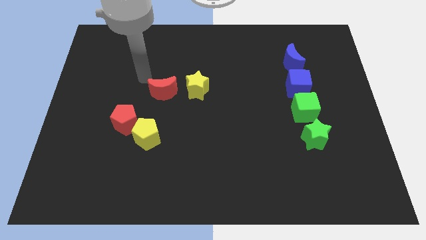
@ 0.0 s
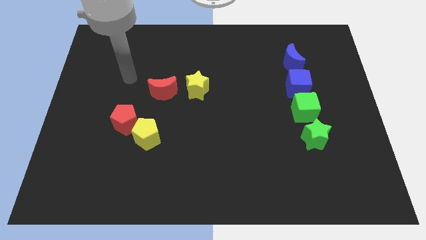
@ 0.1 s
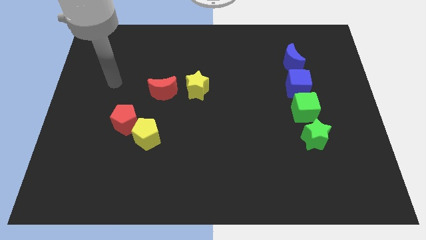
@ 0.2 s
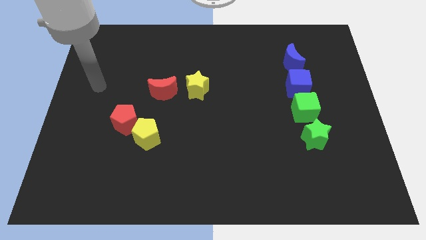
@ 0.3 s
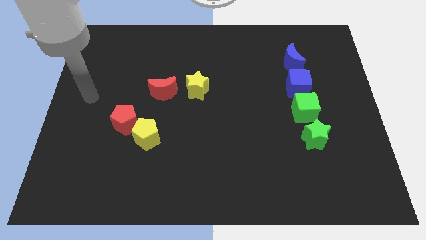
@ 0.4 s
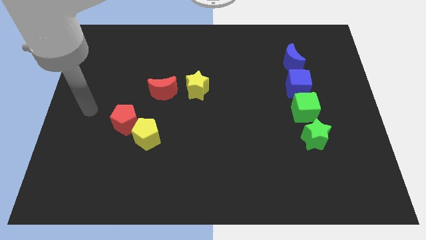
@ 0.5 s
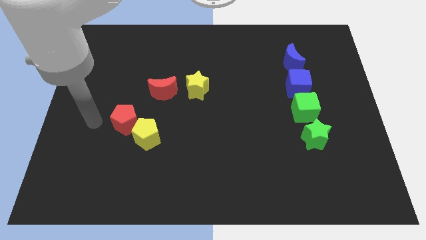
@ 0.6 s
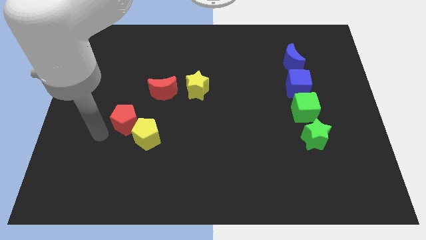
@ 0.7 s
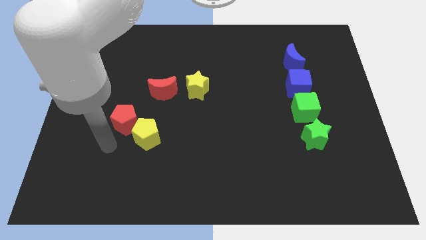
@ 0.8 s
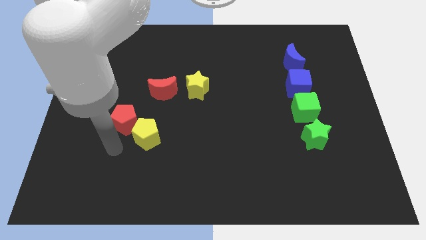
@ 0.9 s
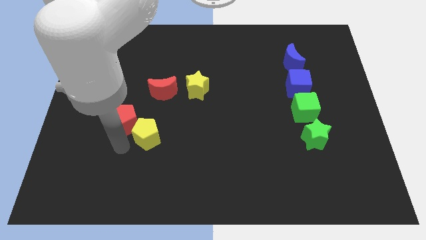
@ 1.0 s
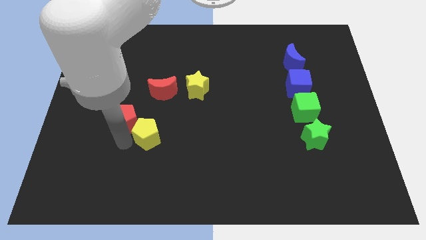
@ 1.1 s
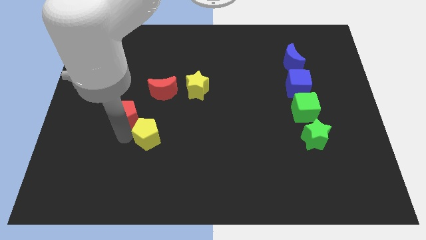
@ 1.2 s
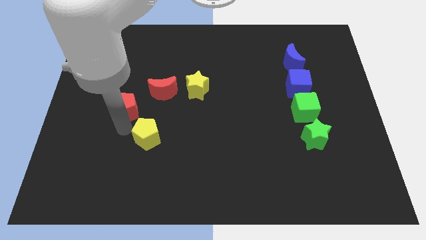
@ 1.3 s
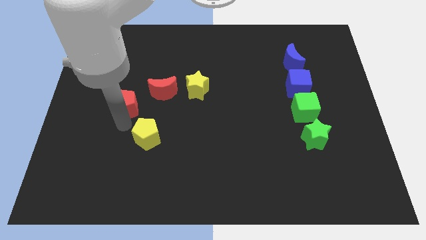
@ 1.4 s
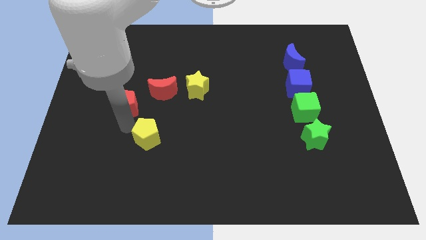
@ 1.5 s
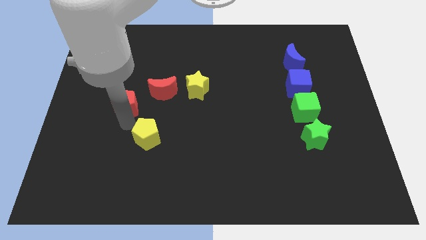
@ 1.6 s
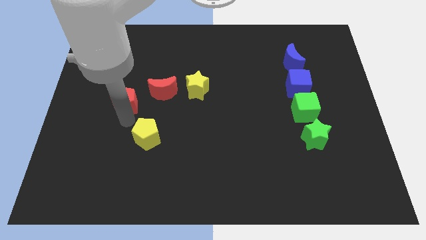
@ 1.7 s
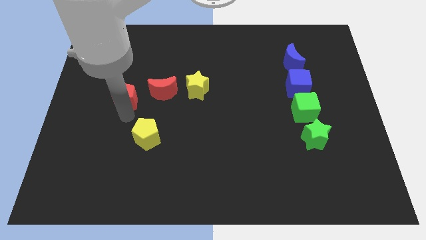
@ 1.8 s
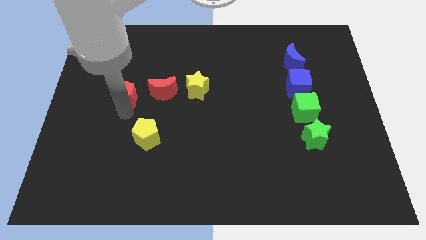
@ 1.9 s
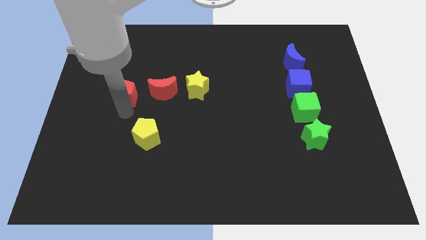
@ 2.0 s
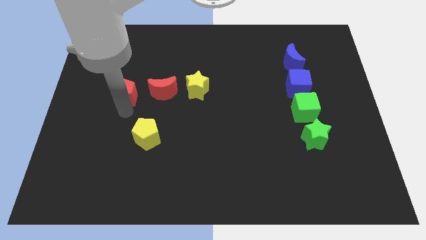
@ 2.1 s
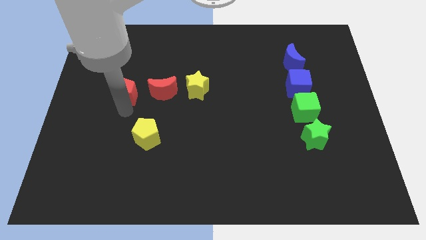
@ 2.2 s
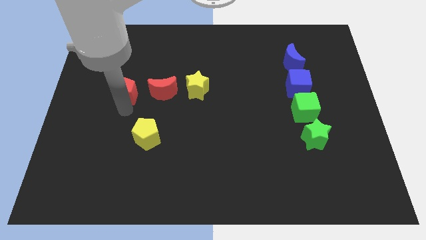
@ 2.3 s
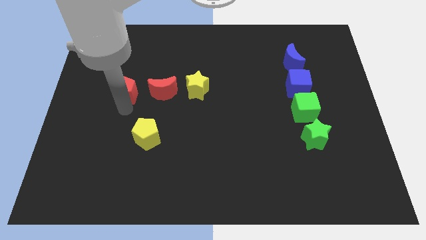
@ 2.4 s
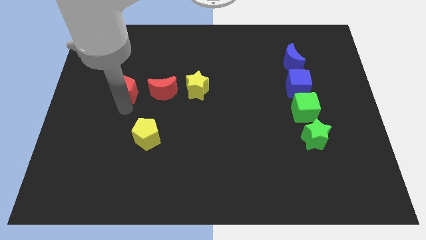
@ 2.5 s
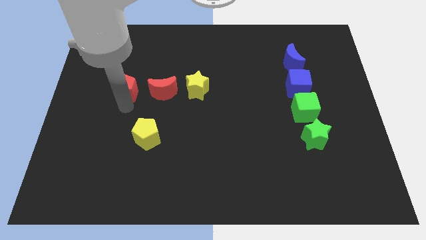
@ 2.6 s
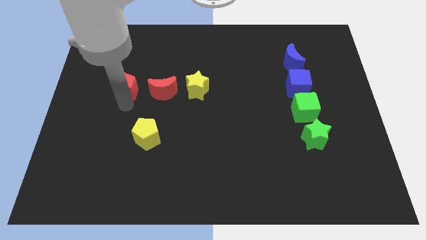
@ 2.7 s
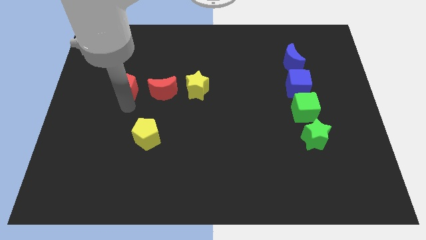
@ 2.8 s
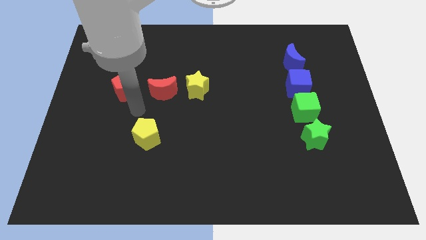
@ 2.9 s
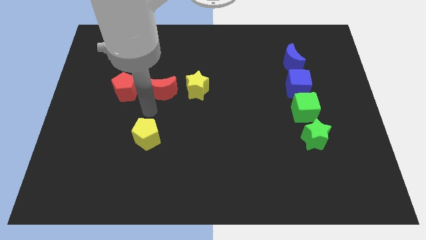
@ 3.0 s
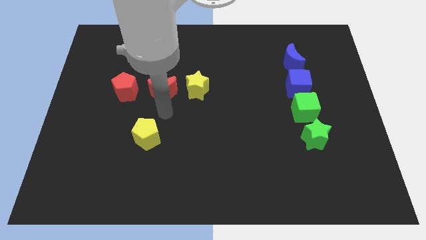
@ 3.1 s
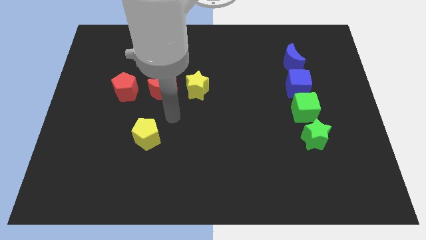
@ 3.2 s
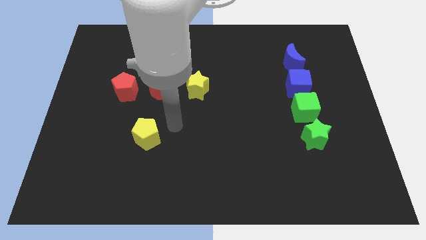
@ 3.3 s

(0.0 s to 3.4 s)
slide the red pentagon to the left side of the red crescent

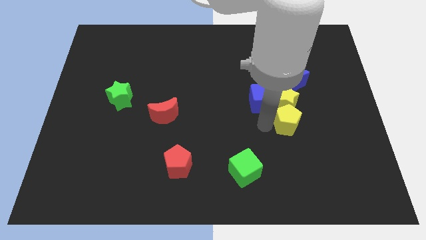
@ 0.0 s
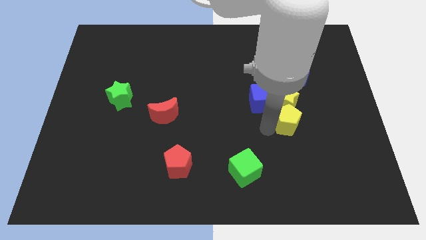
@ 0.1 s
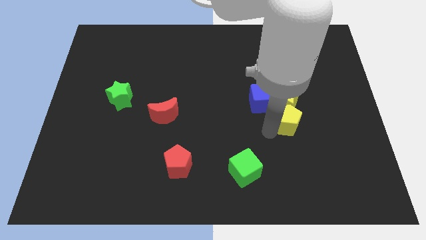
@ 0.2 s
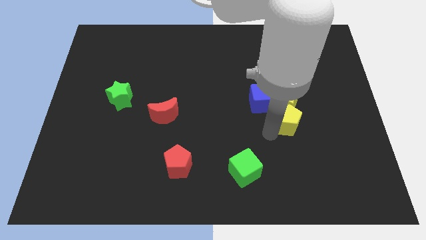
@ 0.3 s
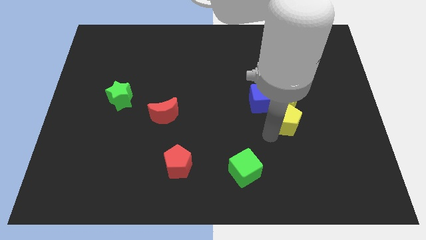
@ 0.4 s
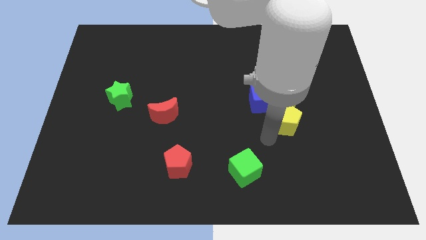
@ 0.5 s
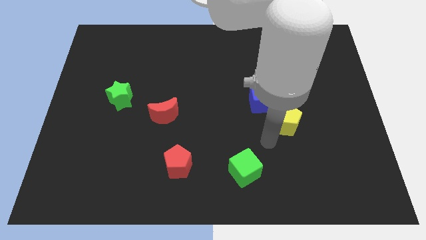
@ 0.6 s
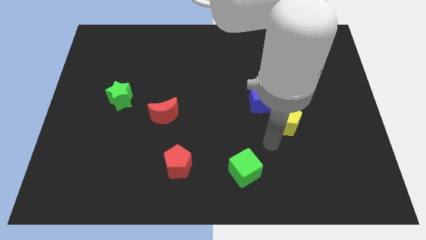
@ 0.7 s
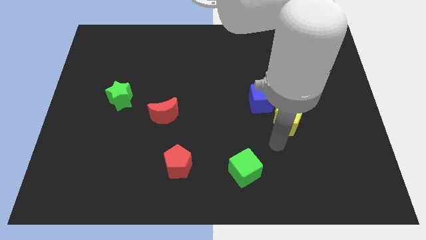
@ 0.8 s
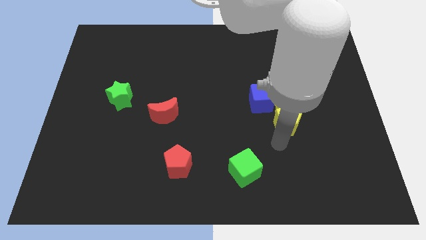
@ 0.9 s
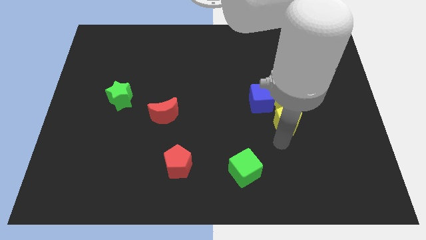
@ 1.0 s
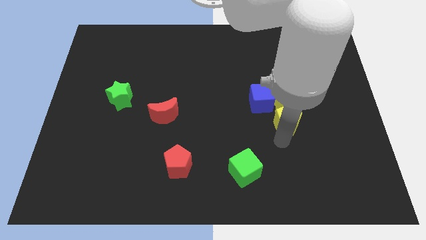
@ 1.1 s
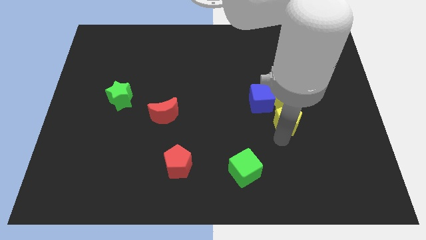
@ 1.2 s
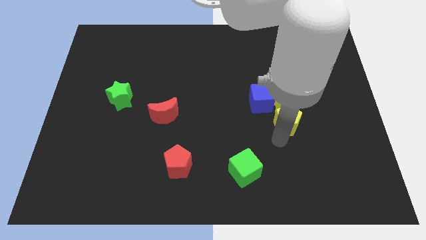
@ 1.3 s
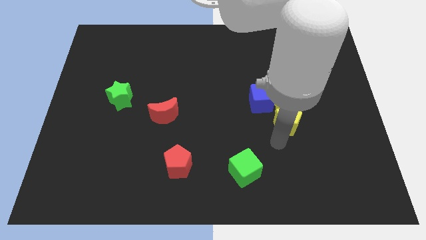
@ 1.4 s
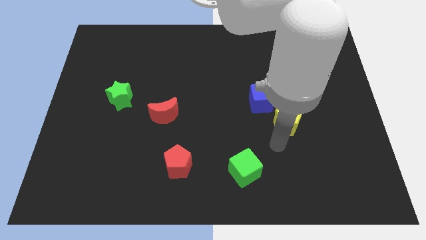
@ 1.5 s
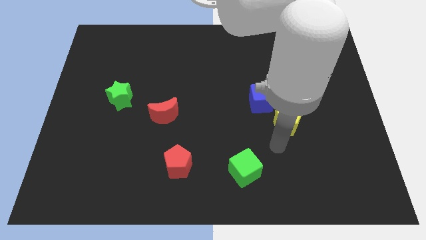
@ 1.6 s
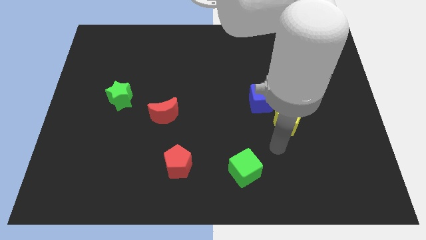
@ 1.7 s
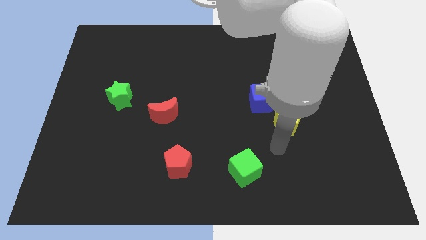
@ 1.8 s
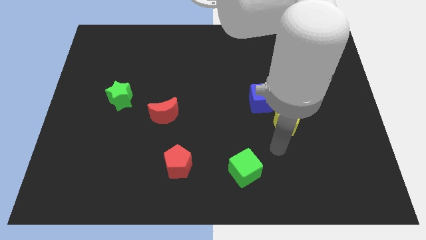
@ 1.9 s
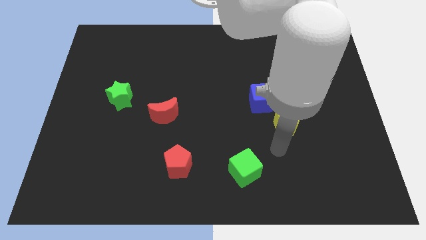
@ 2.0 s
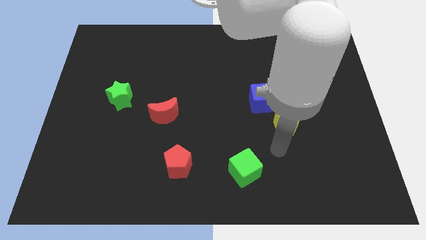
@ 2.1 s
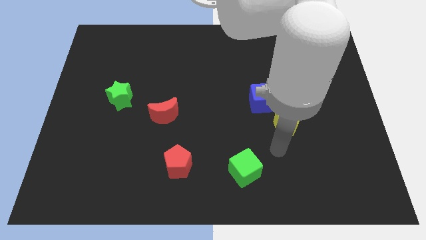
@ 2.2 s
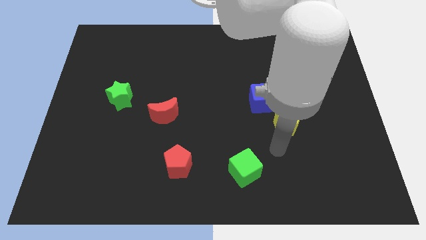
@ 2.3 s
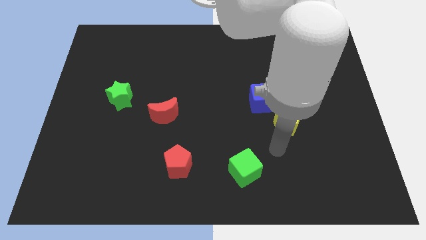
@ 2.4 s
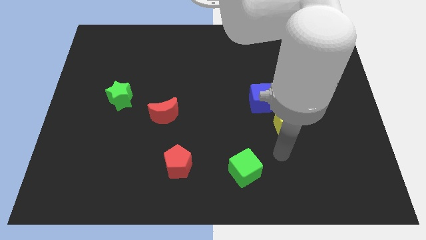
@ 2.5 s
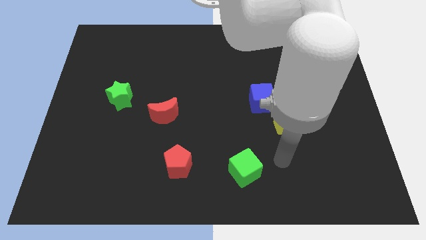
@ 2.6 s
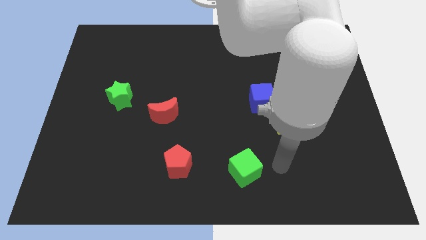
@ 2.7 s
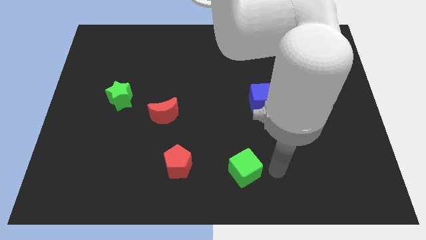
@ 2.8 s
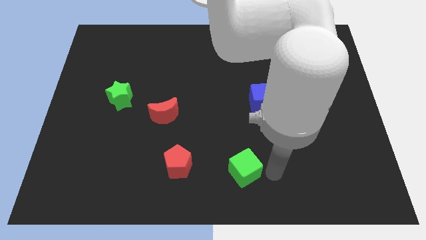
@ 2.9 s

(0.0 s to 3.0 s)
place the arm close to the yellow pentagon

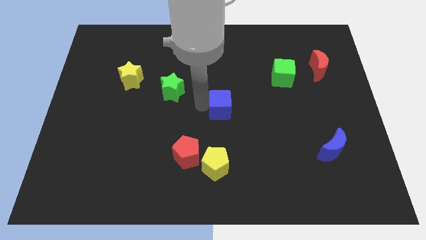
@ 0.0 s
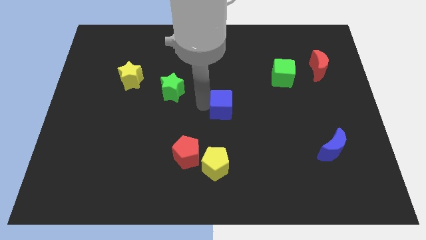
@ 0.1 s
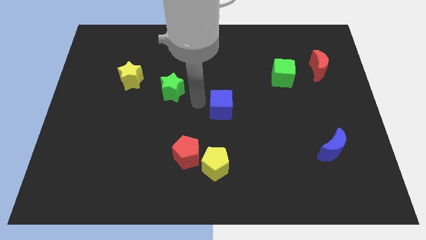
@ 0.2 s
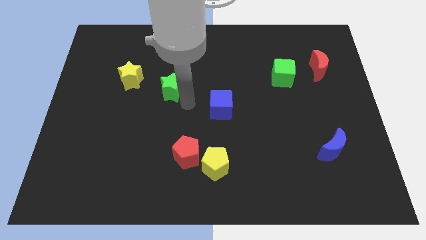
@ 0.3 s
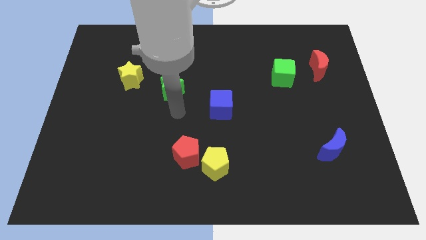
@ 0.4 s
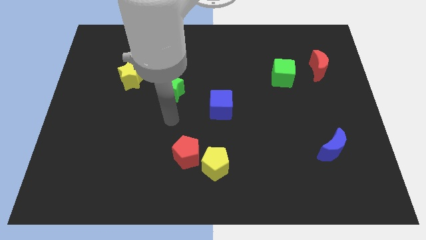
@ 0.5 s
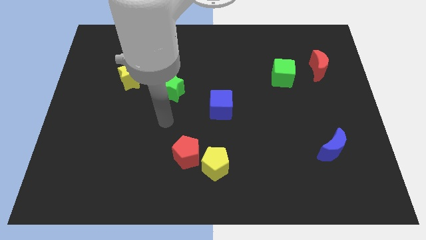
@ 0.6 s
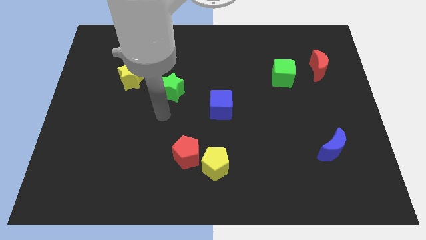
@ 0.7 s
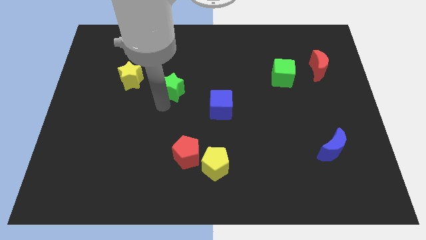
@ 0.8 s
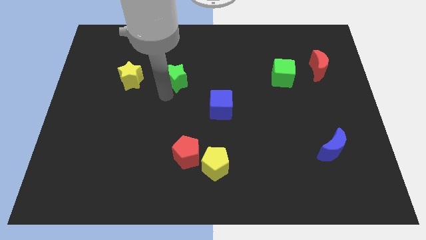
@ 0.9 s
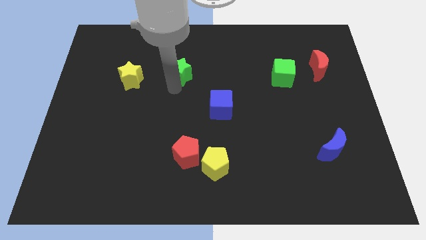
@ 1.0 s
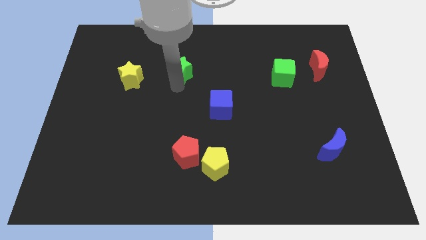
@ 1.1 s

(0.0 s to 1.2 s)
slightly push the green star parallel to the yellow star

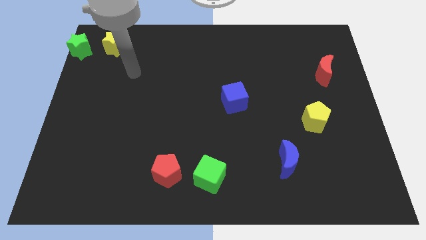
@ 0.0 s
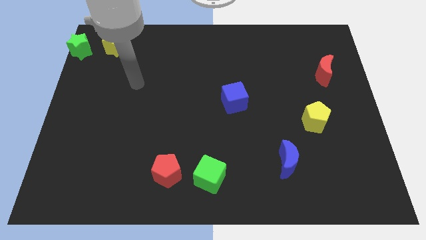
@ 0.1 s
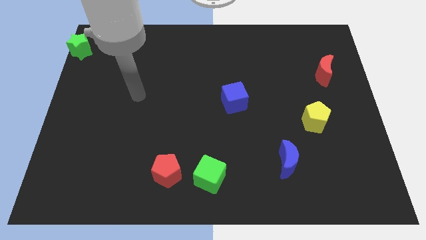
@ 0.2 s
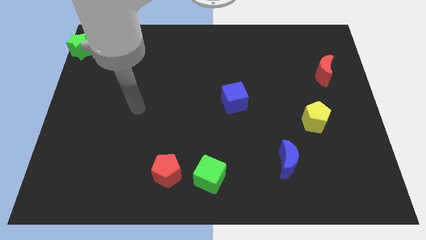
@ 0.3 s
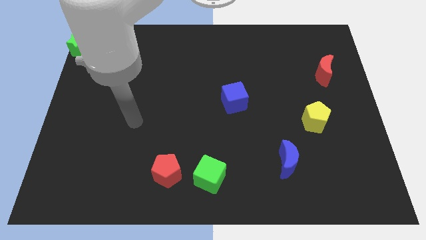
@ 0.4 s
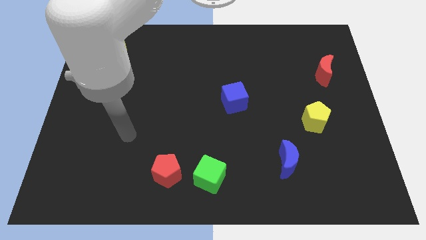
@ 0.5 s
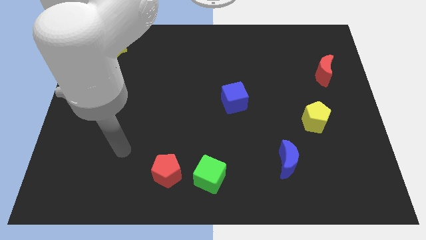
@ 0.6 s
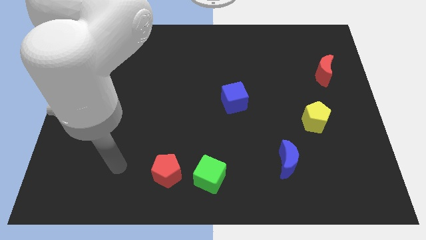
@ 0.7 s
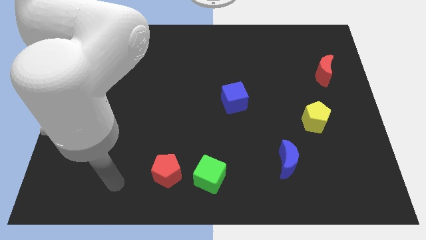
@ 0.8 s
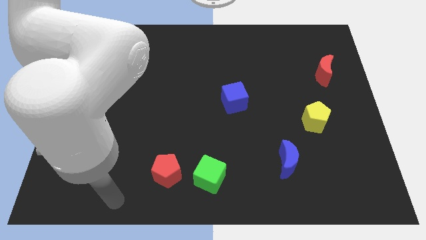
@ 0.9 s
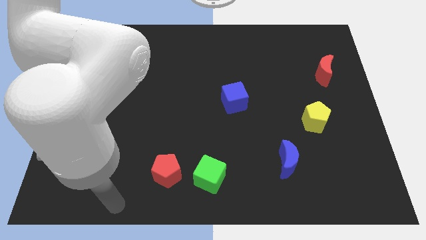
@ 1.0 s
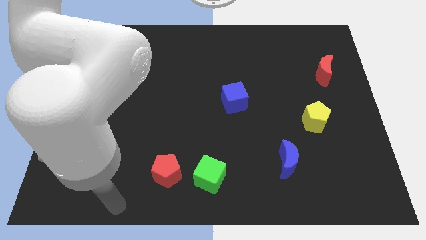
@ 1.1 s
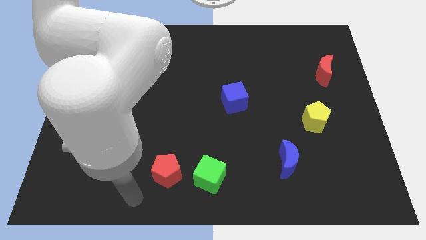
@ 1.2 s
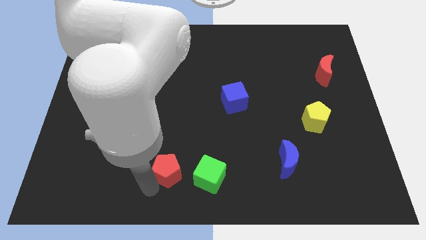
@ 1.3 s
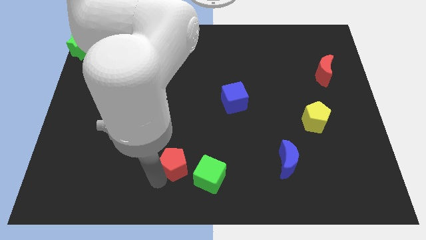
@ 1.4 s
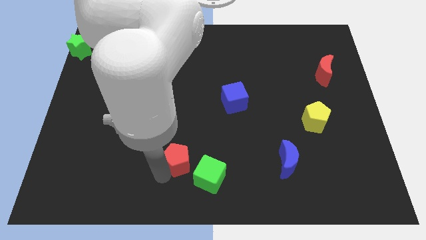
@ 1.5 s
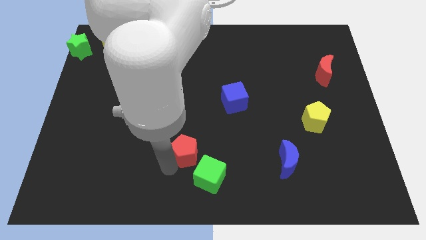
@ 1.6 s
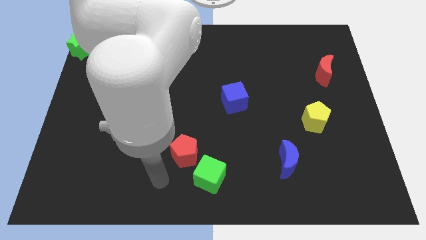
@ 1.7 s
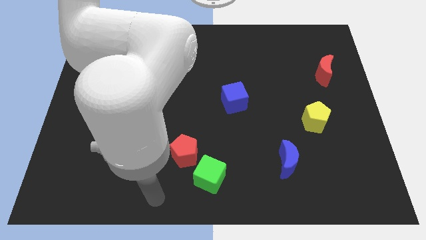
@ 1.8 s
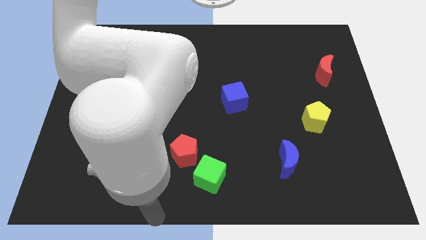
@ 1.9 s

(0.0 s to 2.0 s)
push the red pentagon slightly up
